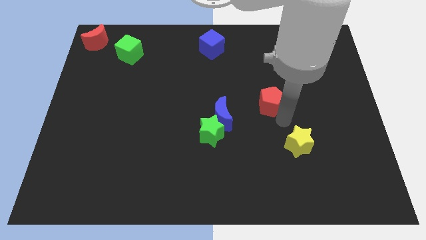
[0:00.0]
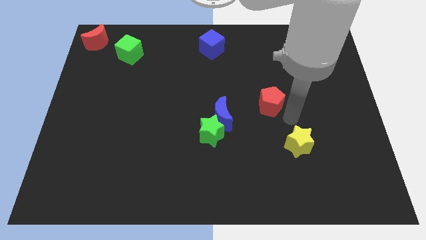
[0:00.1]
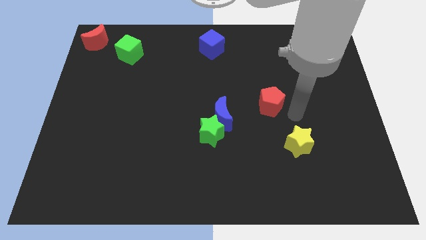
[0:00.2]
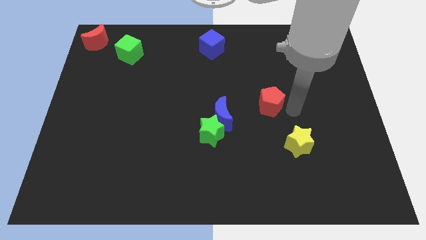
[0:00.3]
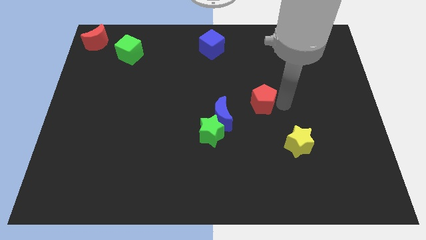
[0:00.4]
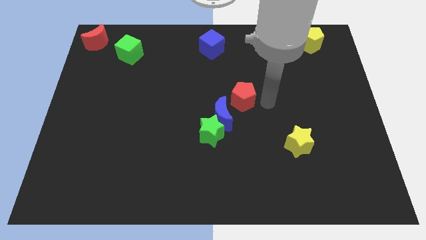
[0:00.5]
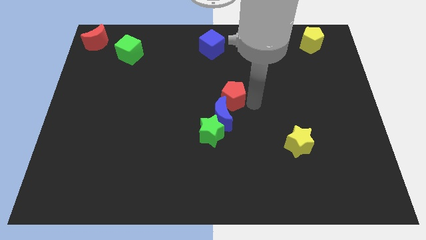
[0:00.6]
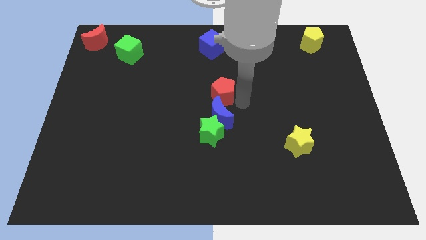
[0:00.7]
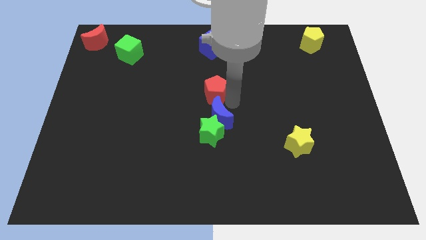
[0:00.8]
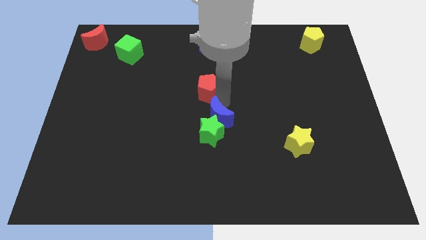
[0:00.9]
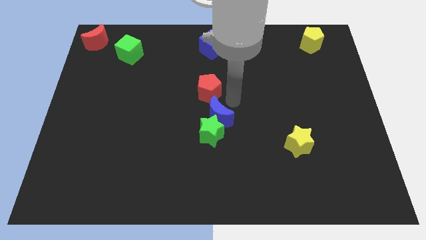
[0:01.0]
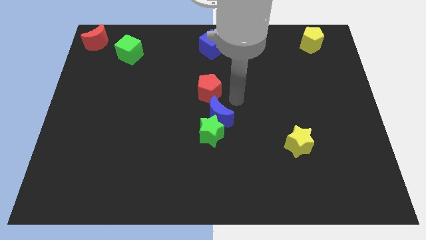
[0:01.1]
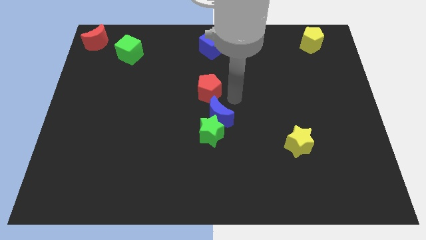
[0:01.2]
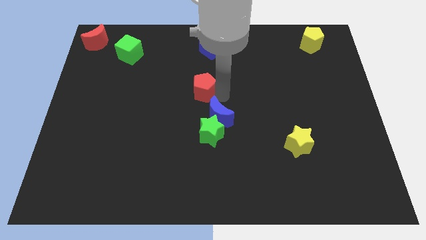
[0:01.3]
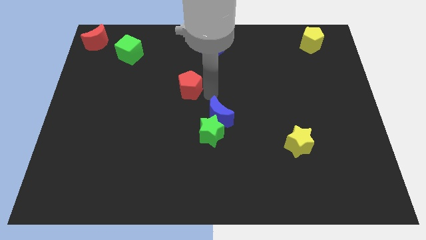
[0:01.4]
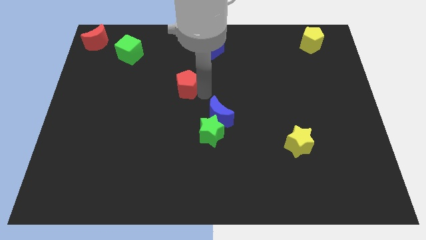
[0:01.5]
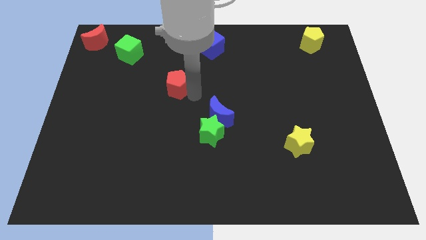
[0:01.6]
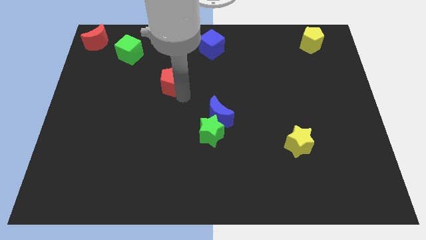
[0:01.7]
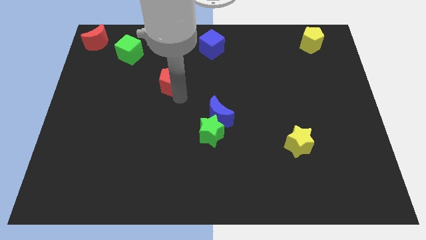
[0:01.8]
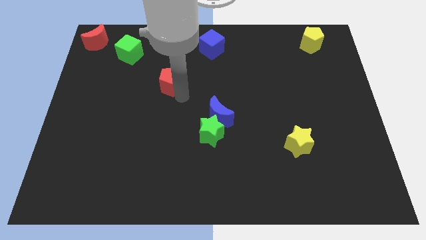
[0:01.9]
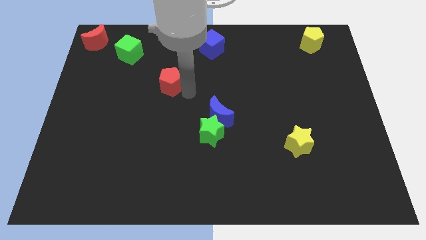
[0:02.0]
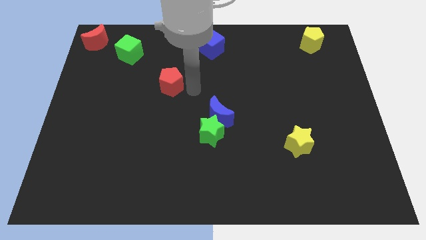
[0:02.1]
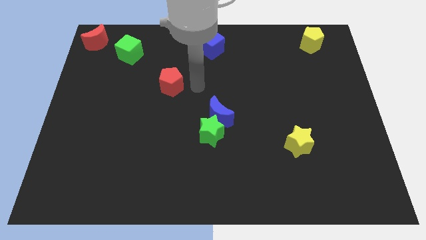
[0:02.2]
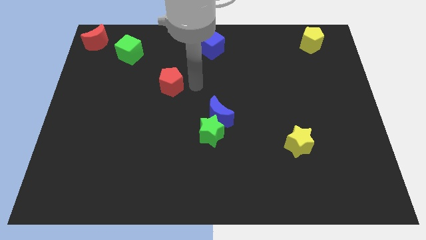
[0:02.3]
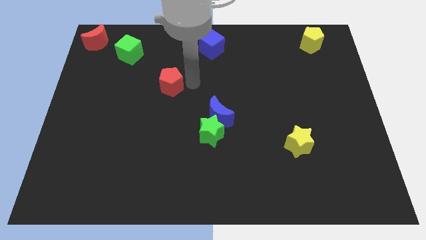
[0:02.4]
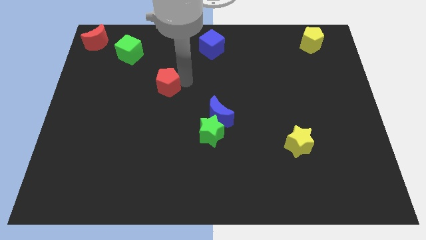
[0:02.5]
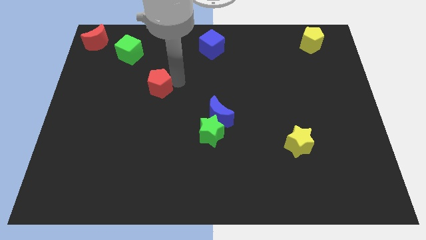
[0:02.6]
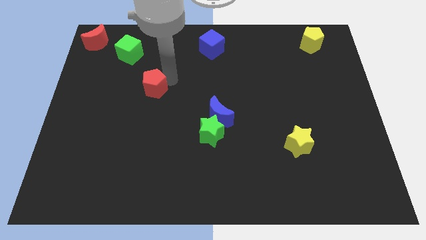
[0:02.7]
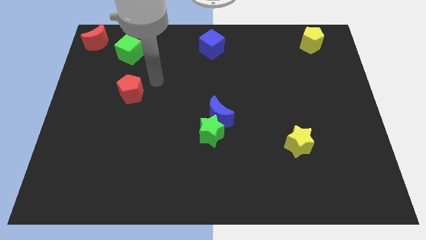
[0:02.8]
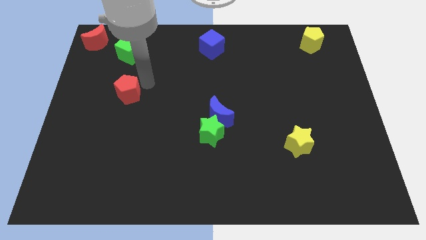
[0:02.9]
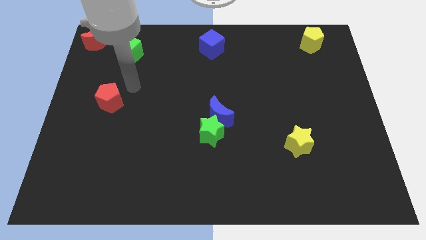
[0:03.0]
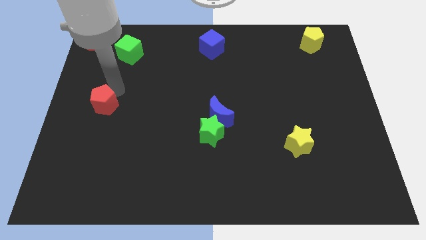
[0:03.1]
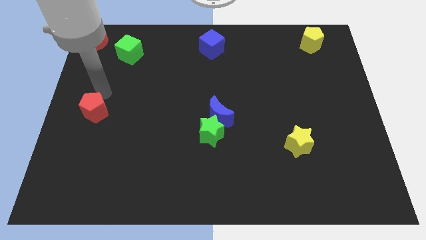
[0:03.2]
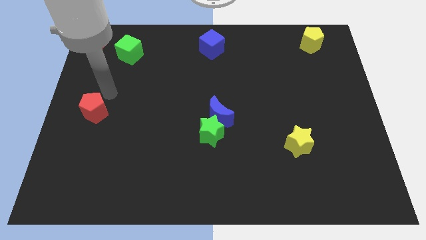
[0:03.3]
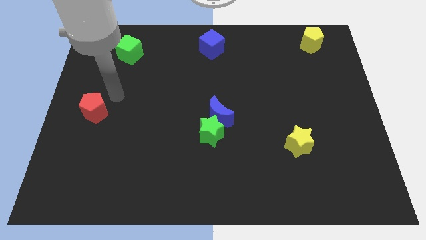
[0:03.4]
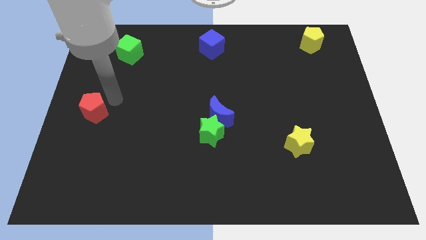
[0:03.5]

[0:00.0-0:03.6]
push the red pentagon towards the left side of the board

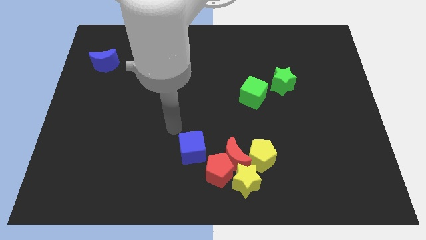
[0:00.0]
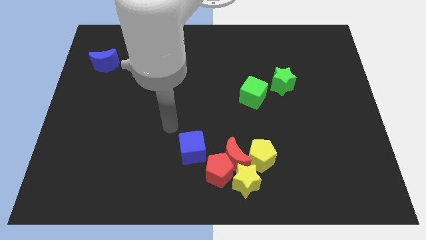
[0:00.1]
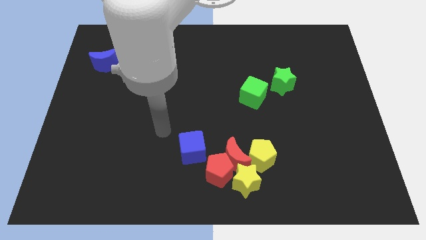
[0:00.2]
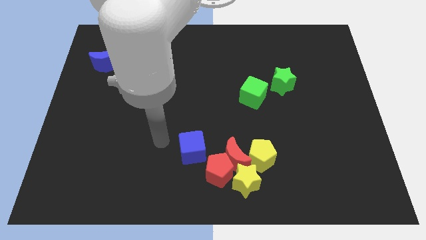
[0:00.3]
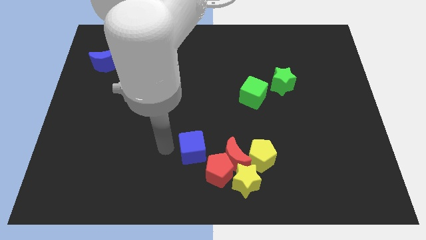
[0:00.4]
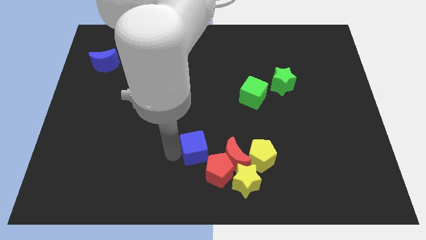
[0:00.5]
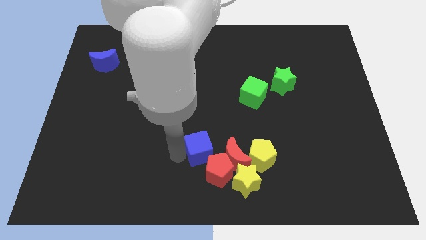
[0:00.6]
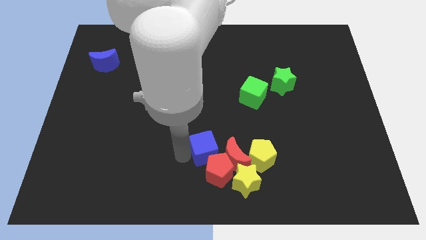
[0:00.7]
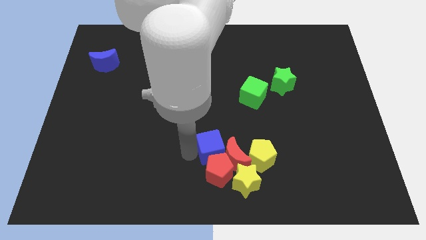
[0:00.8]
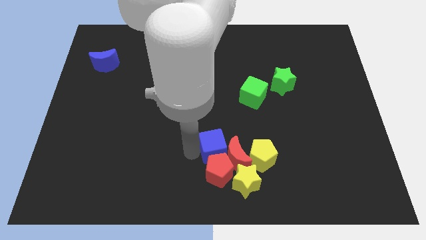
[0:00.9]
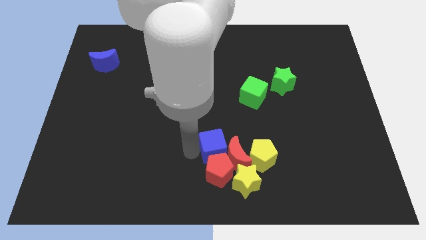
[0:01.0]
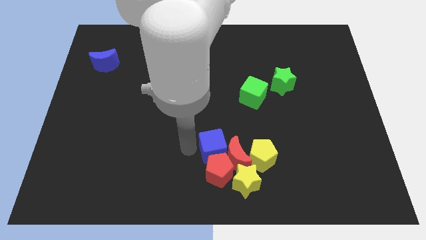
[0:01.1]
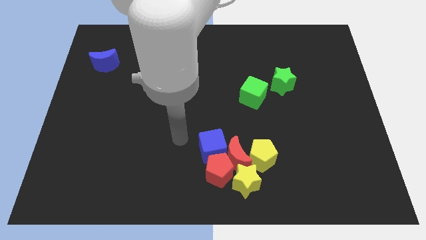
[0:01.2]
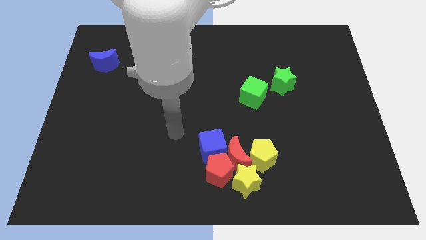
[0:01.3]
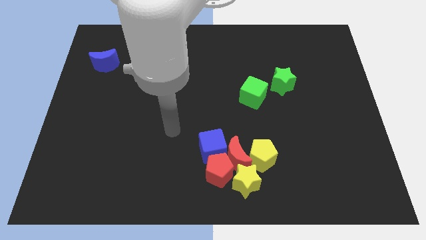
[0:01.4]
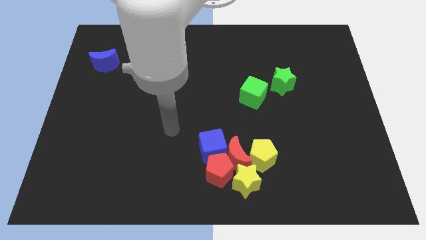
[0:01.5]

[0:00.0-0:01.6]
move the blue cube into the red crescent

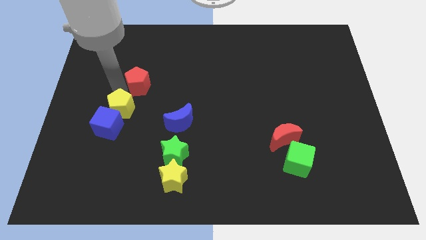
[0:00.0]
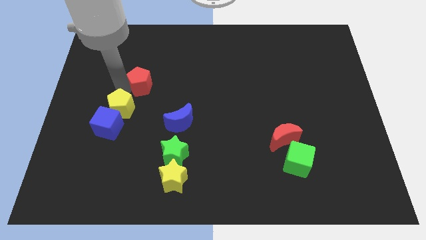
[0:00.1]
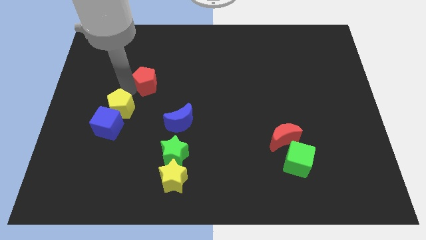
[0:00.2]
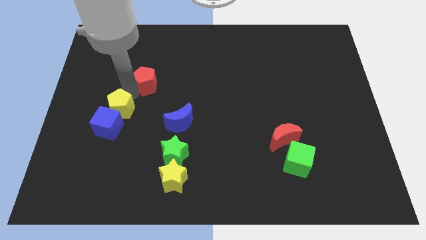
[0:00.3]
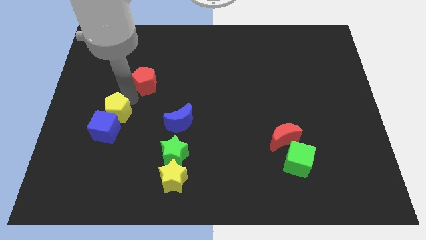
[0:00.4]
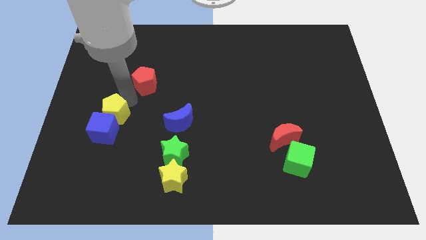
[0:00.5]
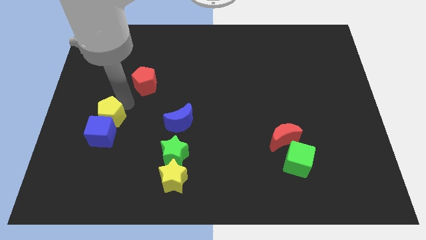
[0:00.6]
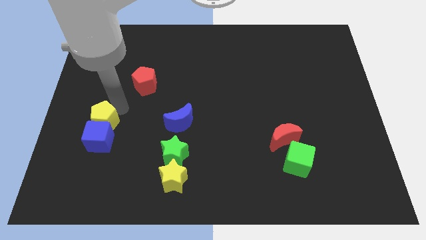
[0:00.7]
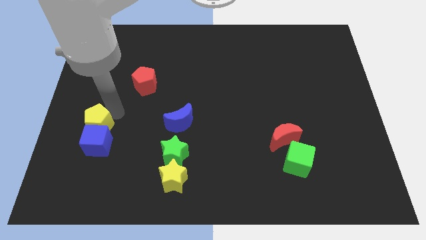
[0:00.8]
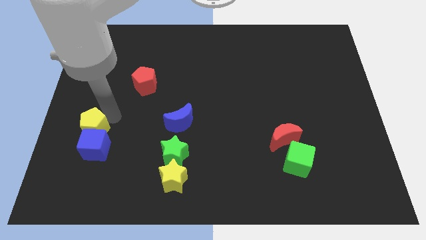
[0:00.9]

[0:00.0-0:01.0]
push yellow pentagon in to blue cube

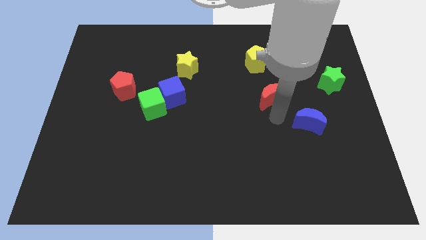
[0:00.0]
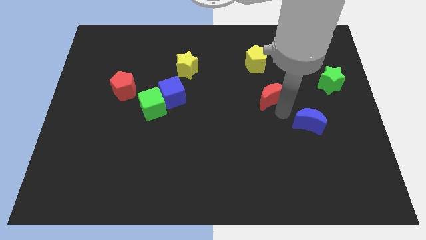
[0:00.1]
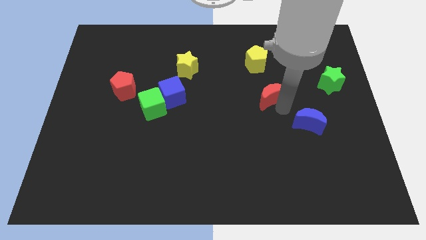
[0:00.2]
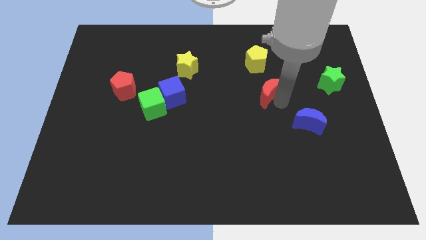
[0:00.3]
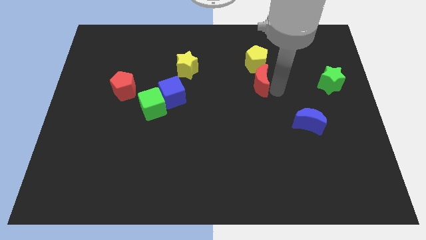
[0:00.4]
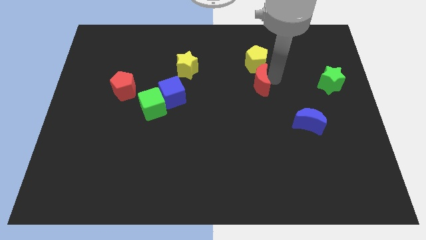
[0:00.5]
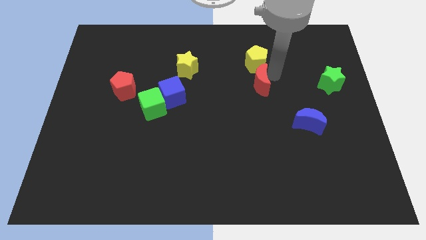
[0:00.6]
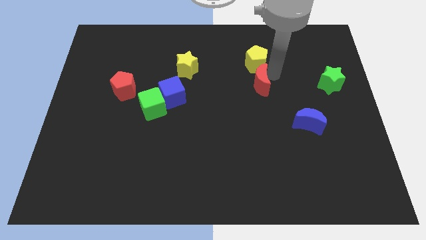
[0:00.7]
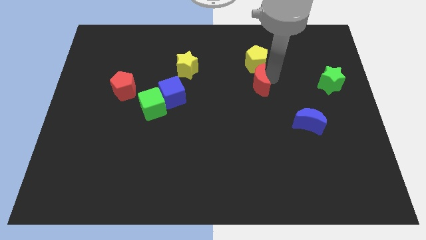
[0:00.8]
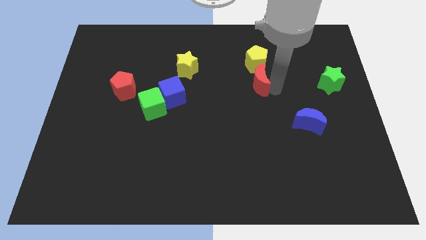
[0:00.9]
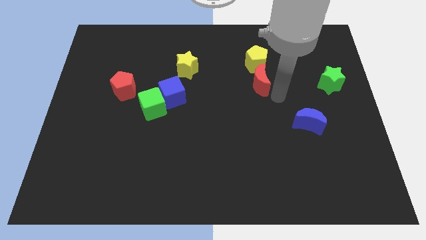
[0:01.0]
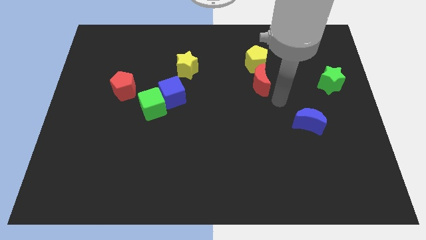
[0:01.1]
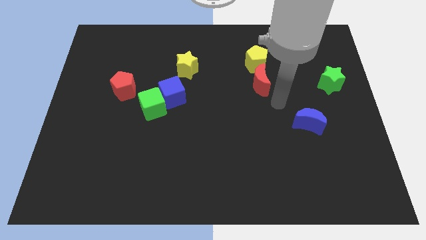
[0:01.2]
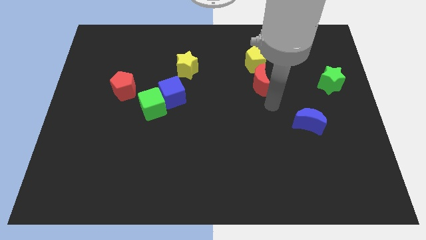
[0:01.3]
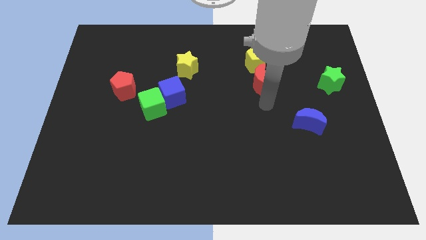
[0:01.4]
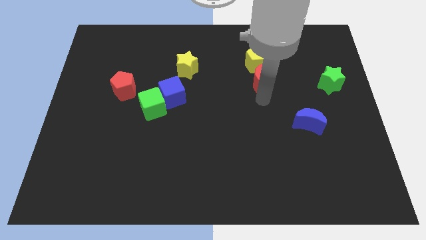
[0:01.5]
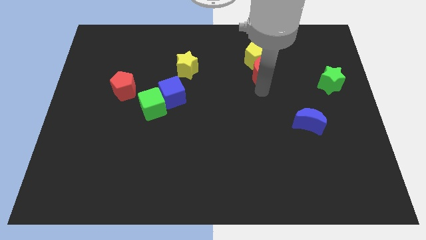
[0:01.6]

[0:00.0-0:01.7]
push the red moon into the bottom of the yellow pentagon

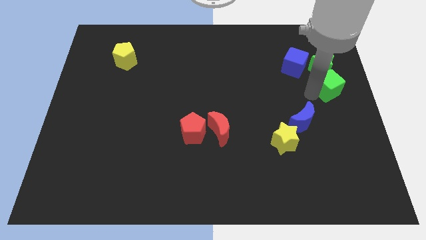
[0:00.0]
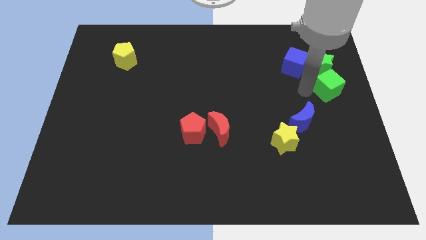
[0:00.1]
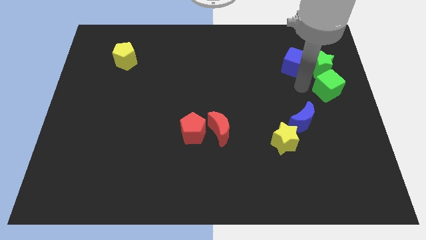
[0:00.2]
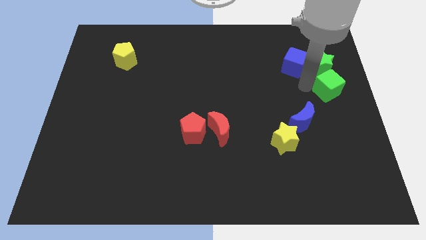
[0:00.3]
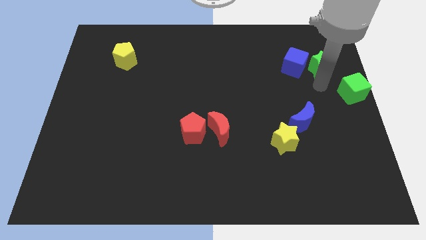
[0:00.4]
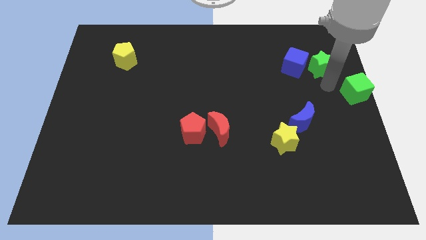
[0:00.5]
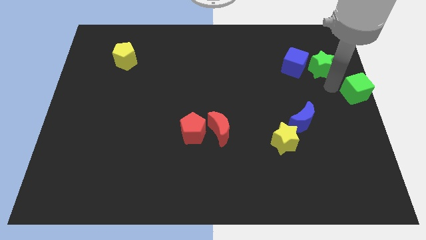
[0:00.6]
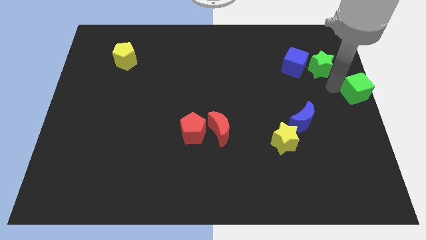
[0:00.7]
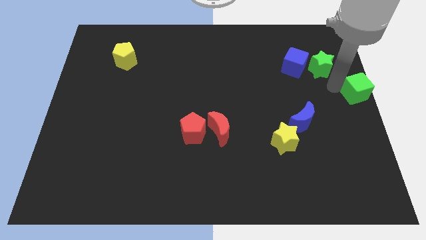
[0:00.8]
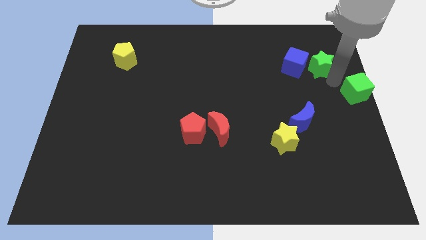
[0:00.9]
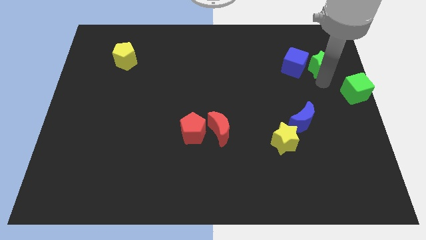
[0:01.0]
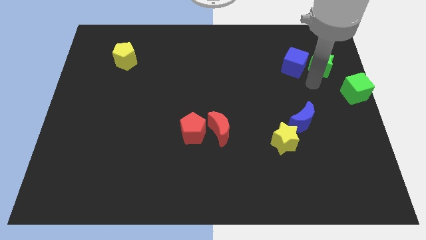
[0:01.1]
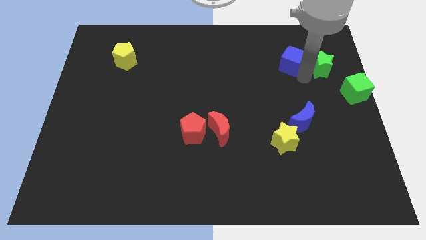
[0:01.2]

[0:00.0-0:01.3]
move the green cube to the right center of the board
